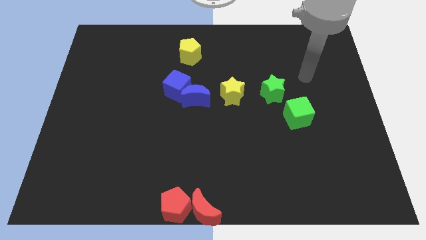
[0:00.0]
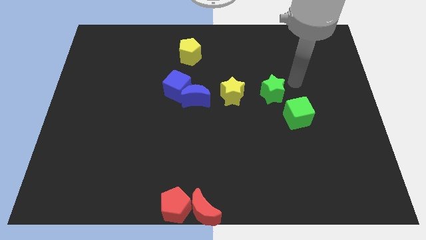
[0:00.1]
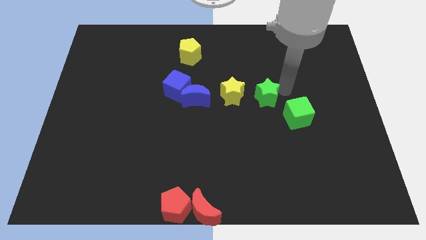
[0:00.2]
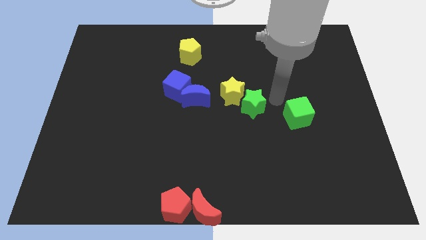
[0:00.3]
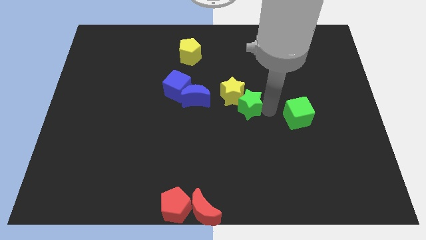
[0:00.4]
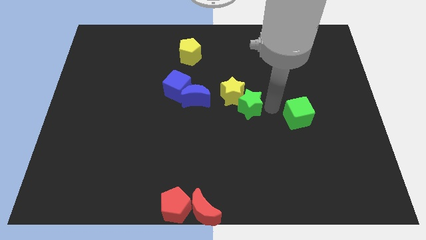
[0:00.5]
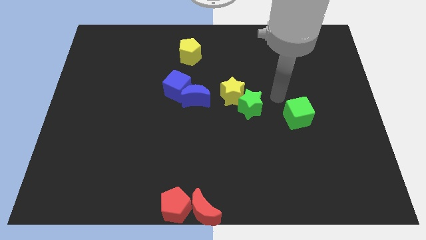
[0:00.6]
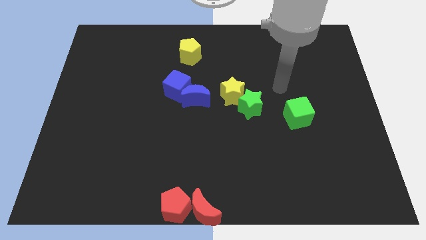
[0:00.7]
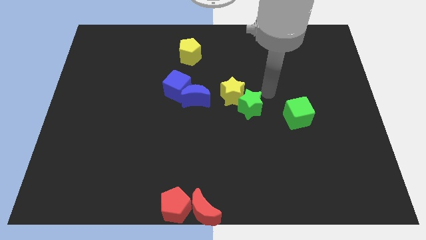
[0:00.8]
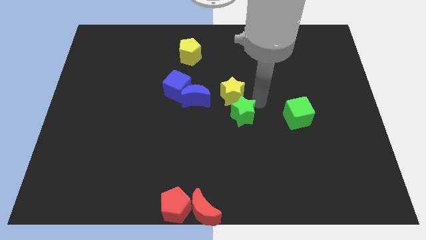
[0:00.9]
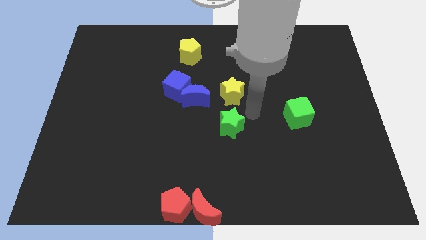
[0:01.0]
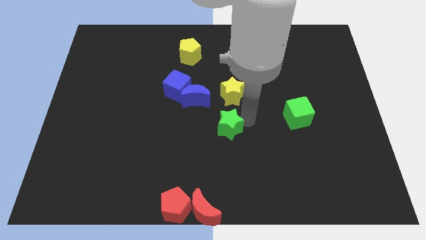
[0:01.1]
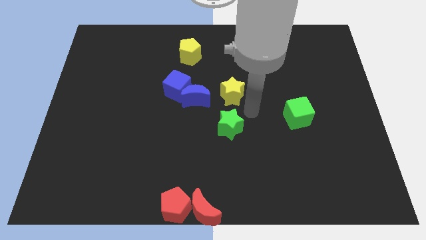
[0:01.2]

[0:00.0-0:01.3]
put the green star below the yellow star

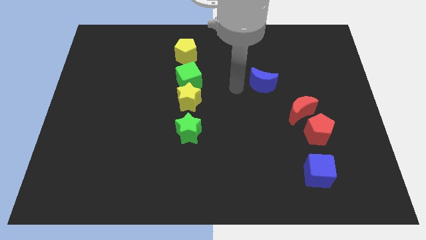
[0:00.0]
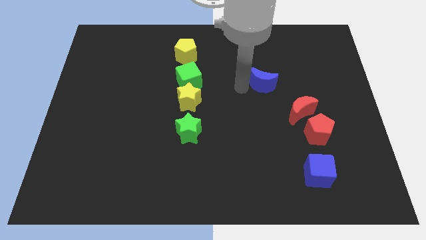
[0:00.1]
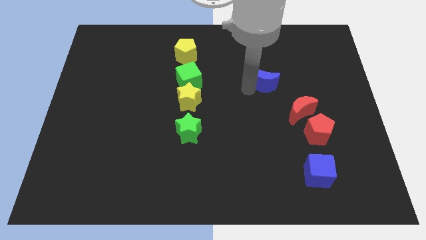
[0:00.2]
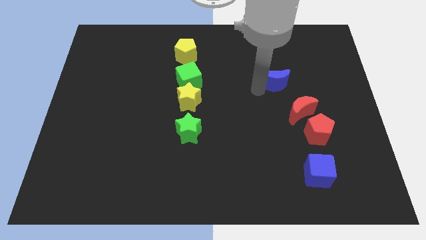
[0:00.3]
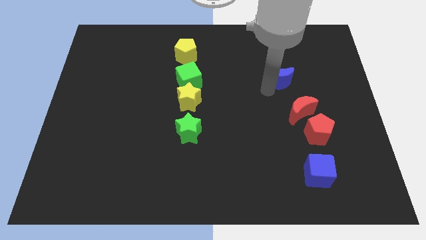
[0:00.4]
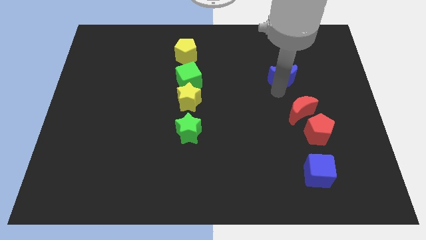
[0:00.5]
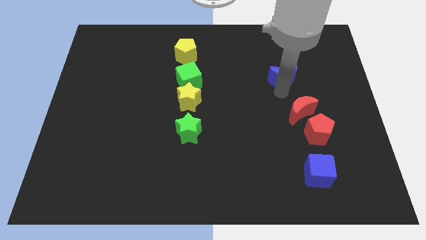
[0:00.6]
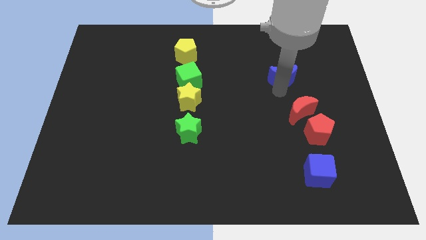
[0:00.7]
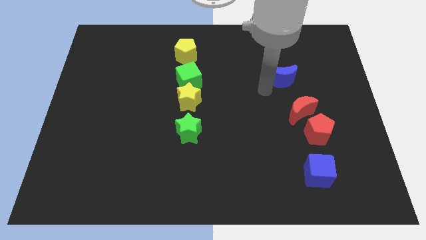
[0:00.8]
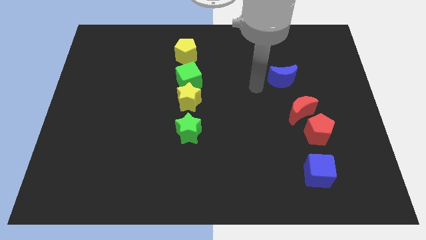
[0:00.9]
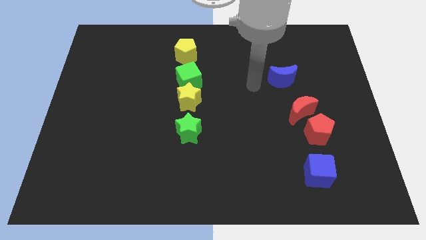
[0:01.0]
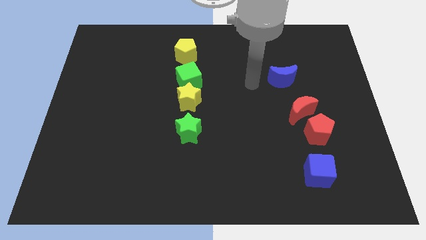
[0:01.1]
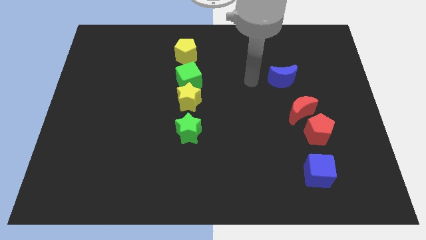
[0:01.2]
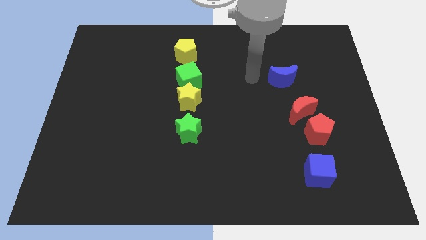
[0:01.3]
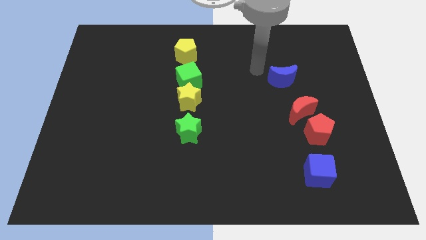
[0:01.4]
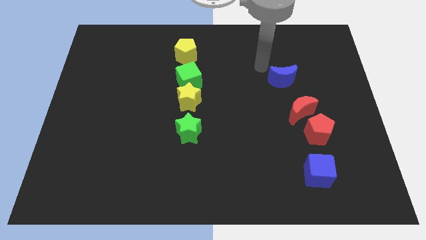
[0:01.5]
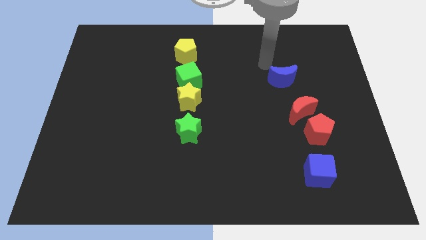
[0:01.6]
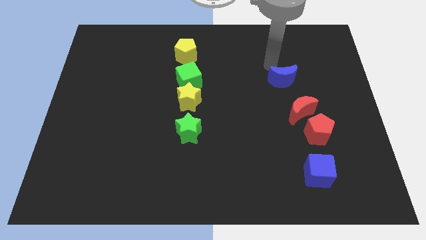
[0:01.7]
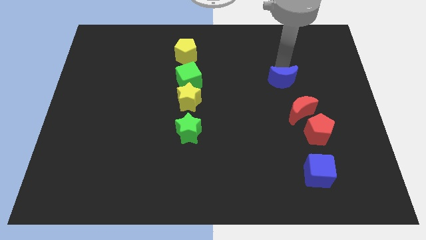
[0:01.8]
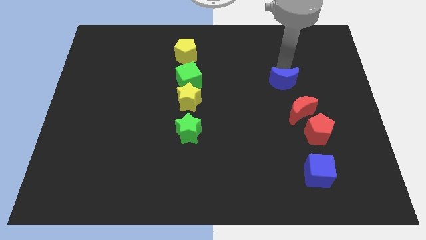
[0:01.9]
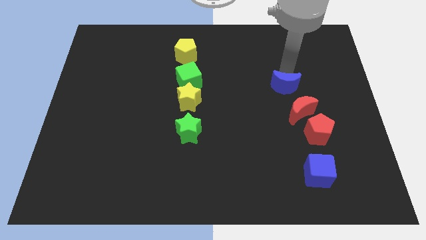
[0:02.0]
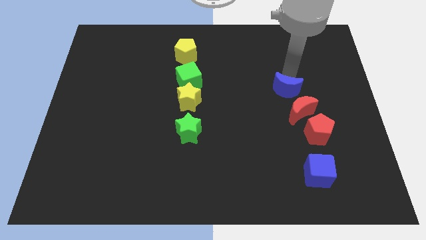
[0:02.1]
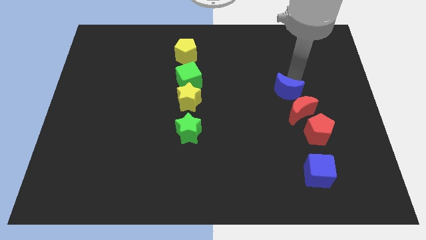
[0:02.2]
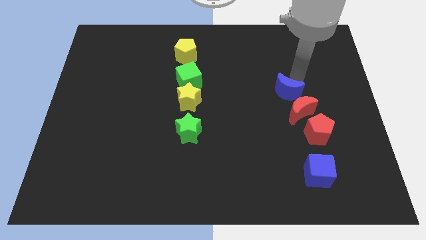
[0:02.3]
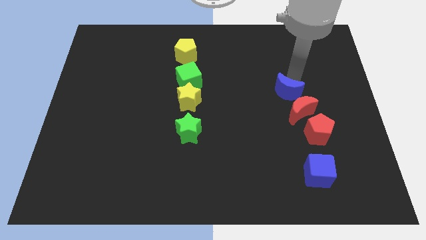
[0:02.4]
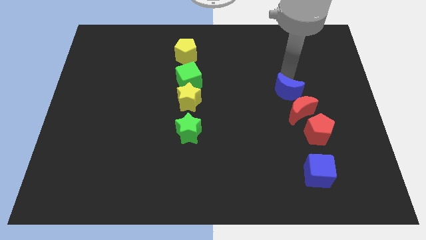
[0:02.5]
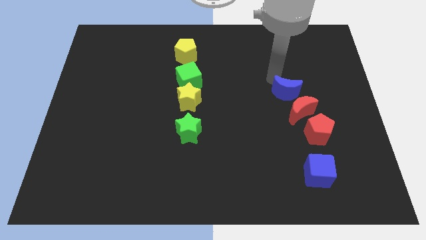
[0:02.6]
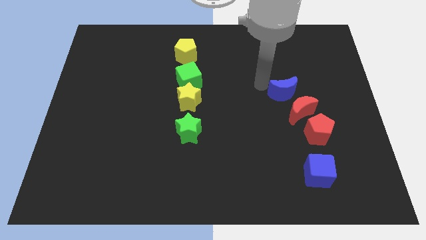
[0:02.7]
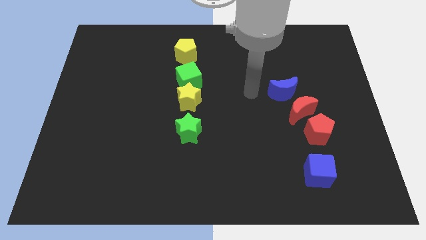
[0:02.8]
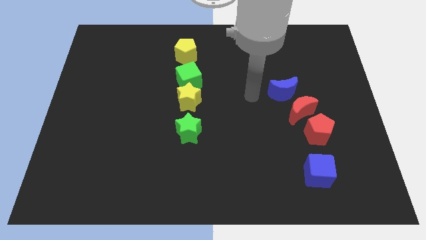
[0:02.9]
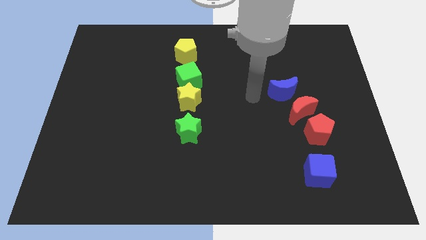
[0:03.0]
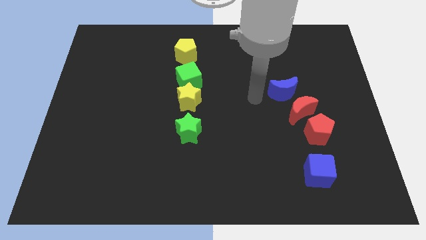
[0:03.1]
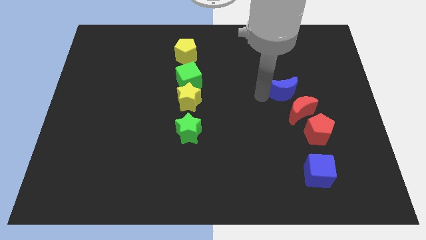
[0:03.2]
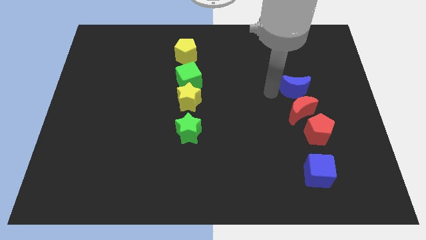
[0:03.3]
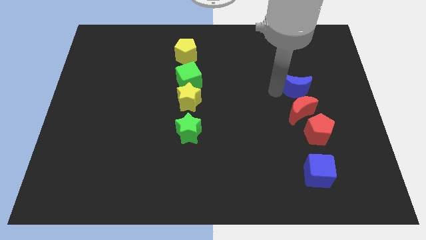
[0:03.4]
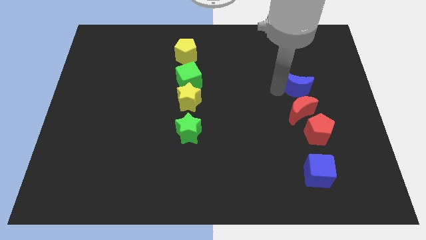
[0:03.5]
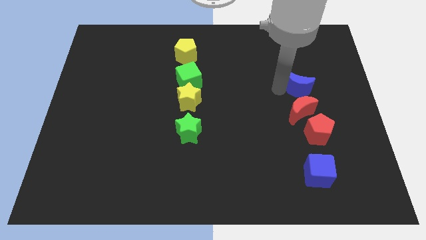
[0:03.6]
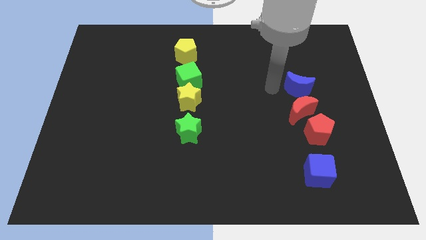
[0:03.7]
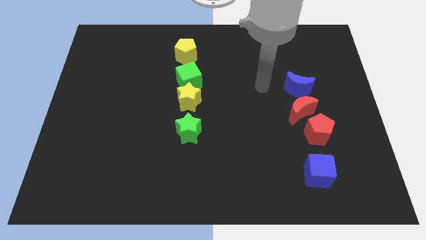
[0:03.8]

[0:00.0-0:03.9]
slide the blue moon to the top of the red crescent

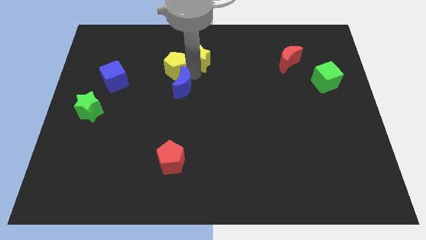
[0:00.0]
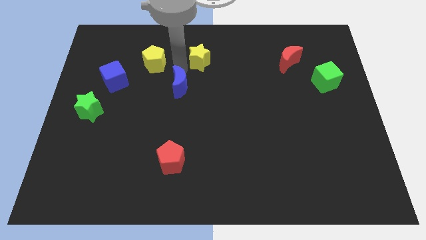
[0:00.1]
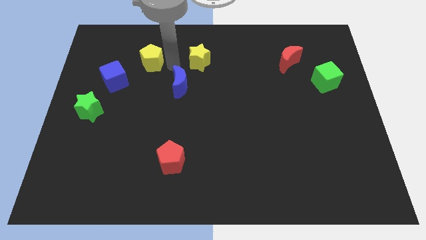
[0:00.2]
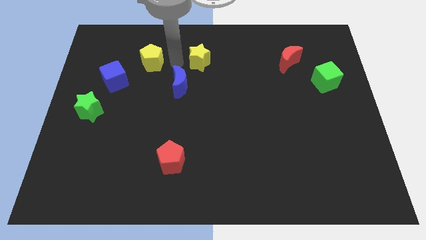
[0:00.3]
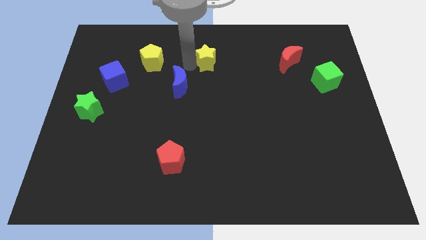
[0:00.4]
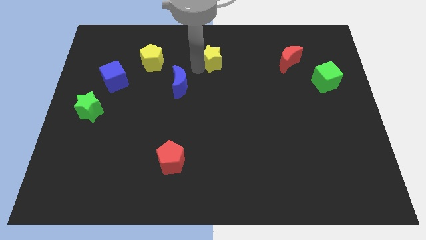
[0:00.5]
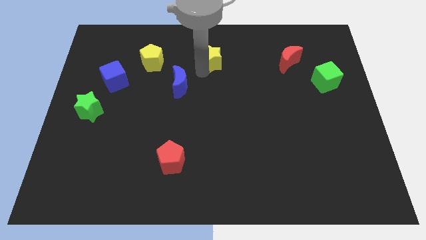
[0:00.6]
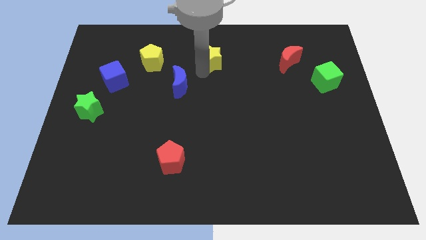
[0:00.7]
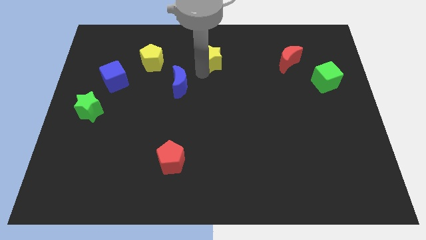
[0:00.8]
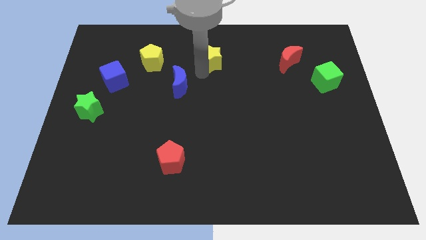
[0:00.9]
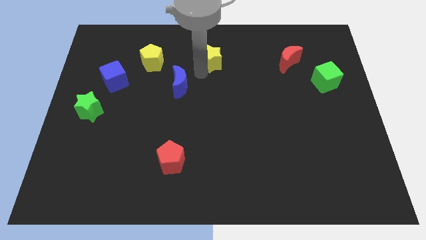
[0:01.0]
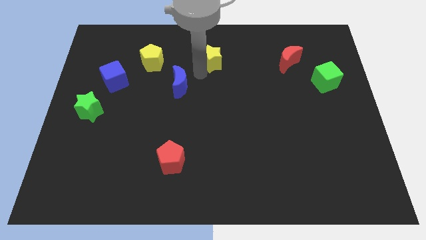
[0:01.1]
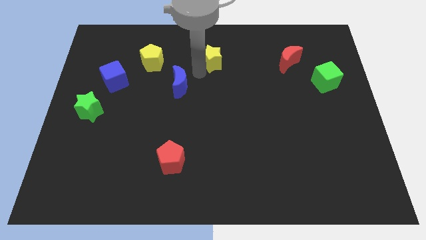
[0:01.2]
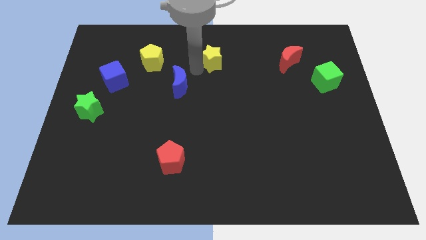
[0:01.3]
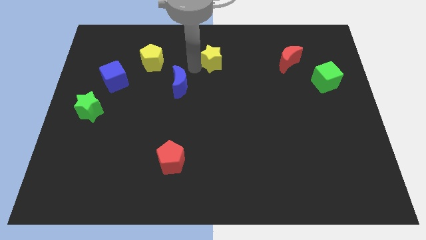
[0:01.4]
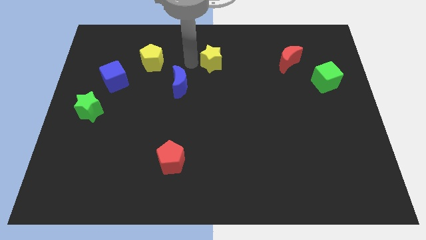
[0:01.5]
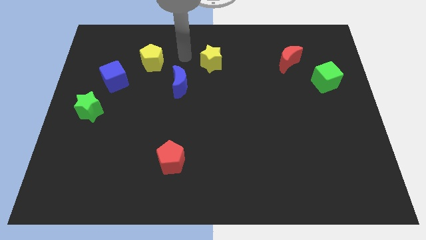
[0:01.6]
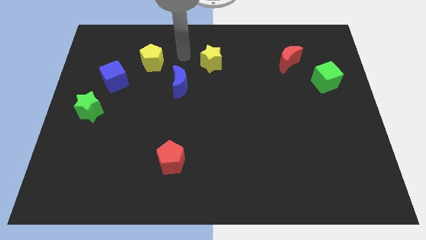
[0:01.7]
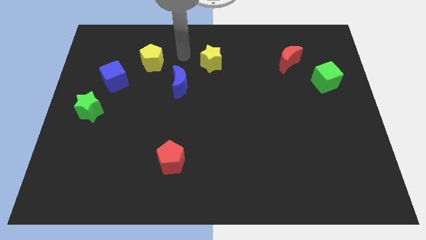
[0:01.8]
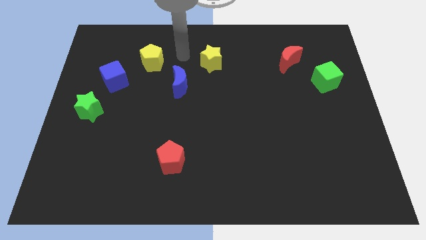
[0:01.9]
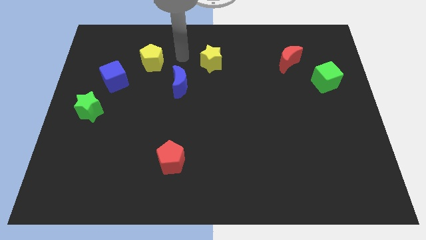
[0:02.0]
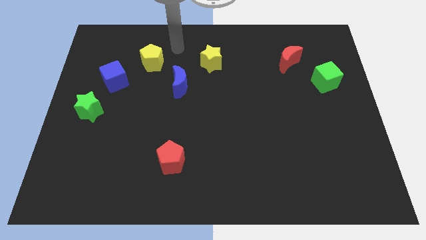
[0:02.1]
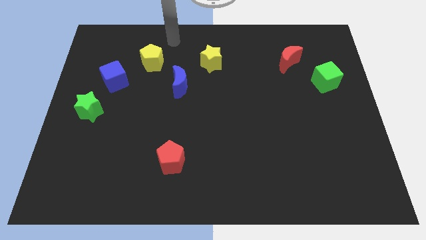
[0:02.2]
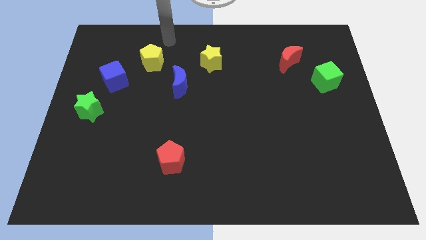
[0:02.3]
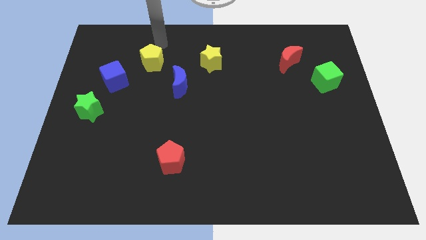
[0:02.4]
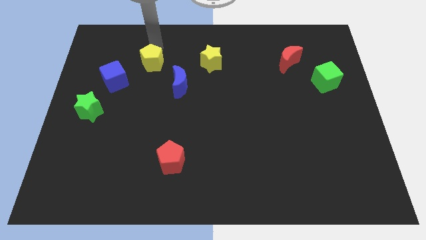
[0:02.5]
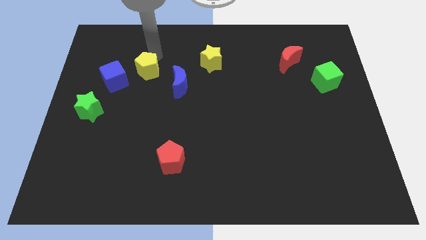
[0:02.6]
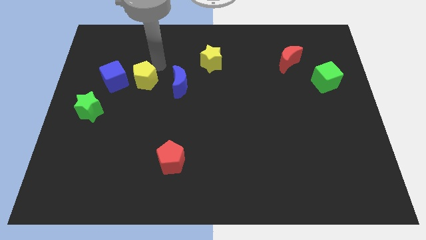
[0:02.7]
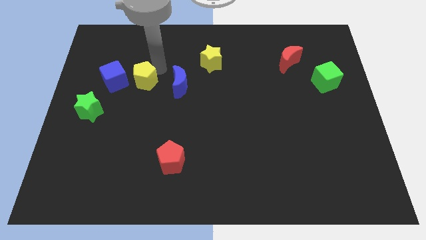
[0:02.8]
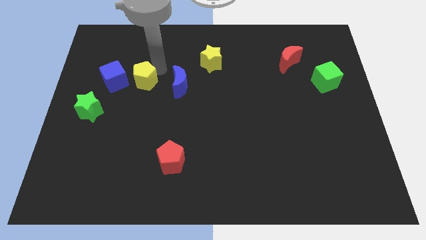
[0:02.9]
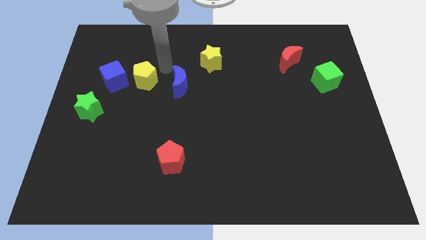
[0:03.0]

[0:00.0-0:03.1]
separate yellow blocks from each other

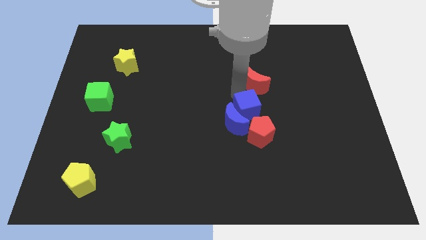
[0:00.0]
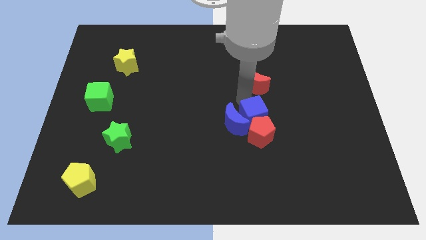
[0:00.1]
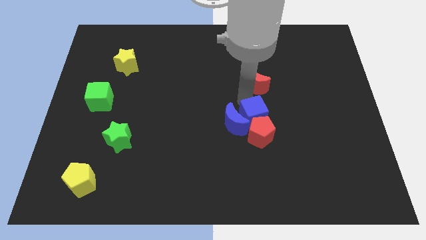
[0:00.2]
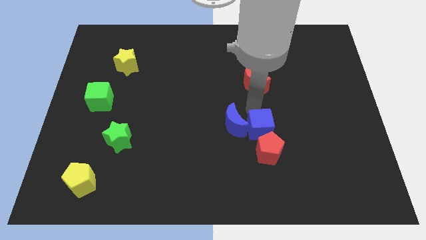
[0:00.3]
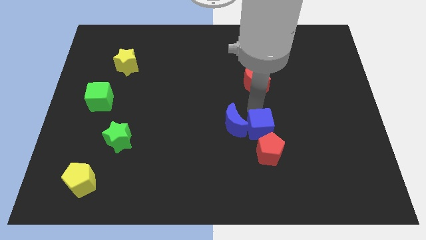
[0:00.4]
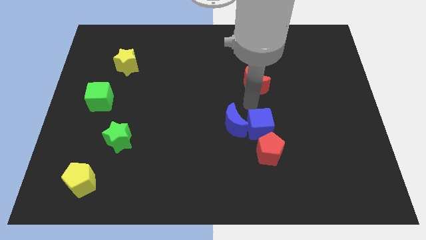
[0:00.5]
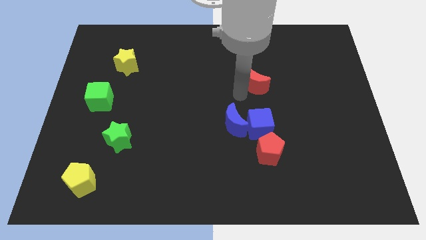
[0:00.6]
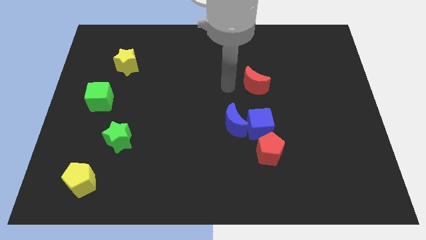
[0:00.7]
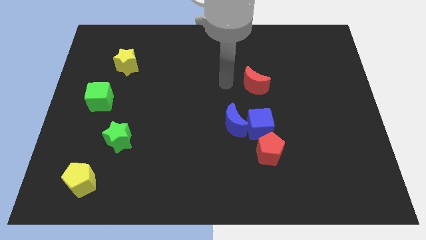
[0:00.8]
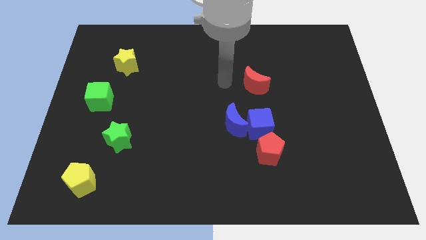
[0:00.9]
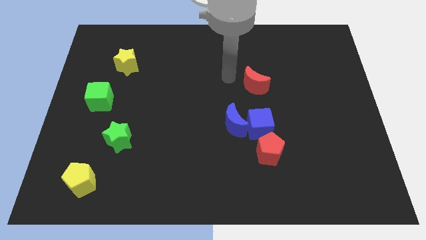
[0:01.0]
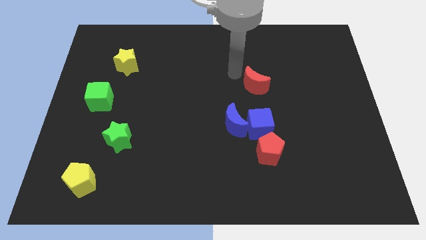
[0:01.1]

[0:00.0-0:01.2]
push the blue cube into the red pentagon
